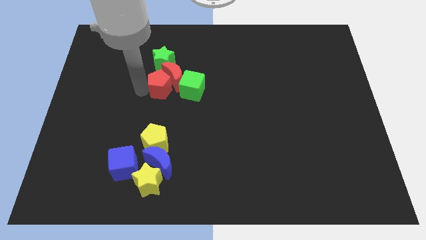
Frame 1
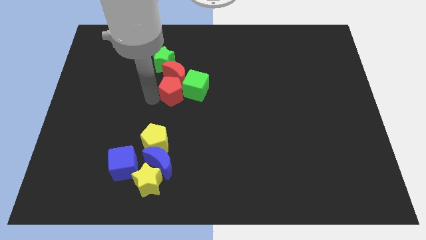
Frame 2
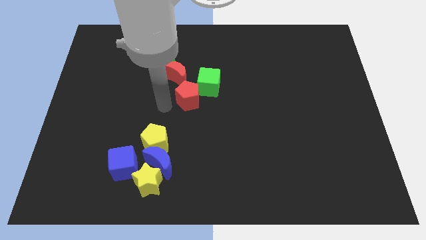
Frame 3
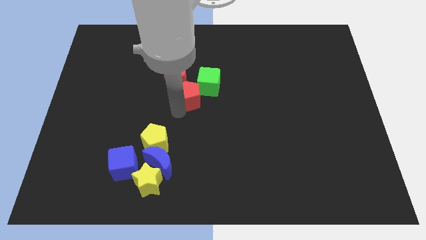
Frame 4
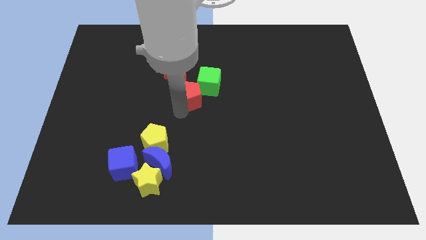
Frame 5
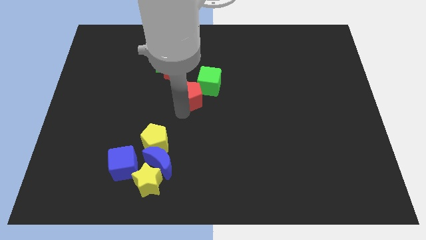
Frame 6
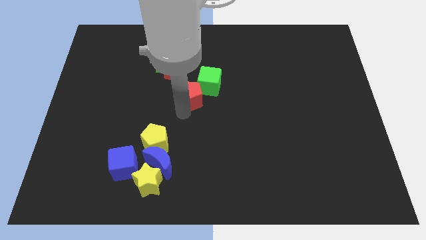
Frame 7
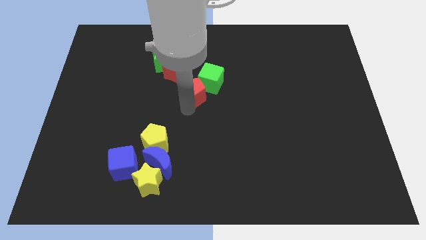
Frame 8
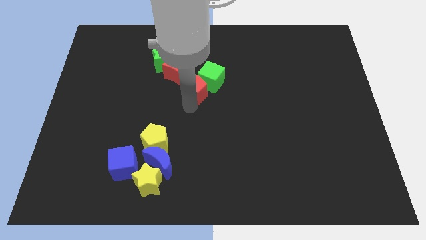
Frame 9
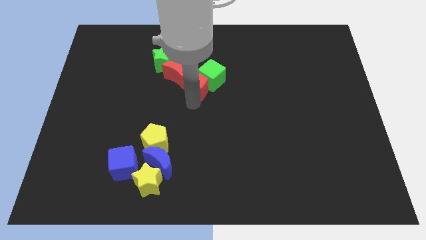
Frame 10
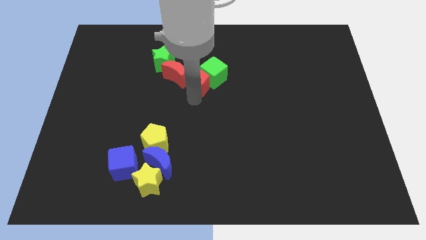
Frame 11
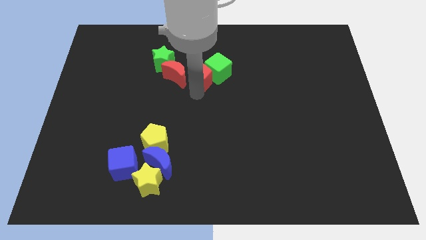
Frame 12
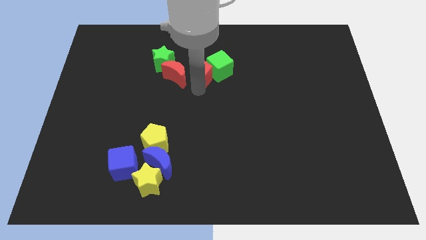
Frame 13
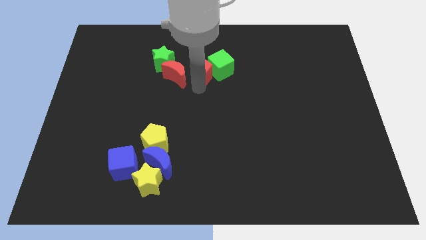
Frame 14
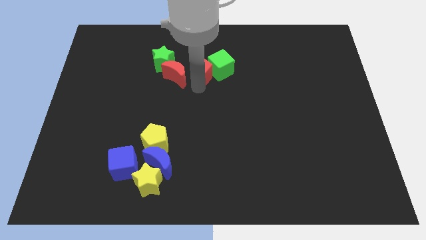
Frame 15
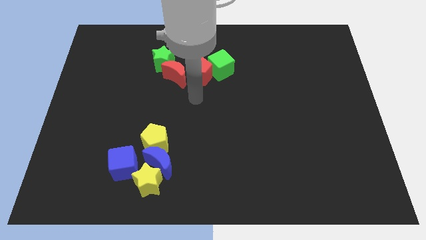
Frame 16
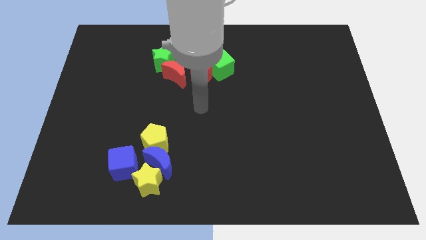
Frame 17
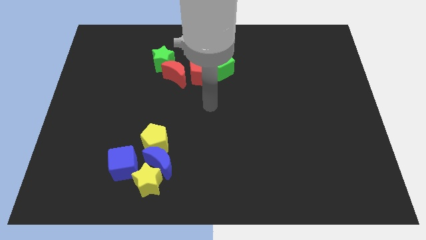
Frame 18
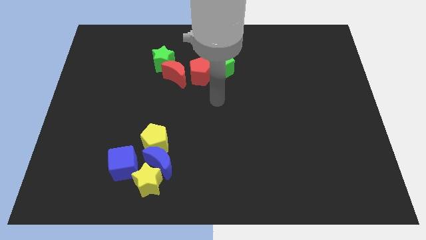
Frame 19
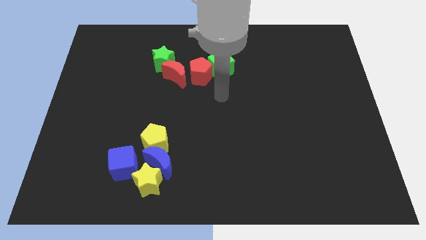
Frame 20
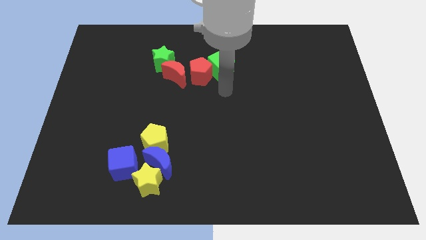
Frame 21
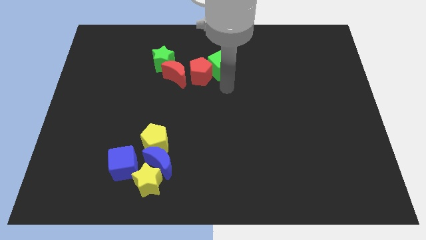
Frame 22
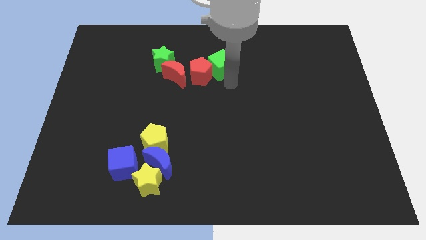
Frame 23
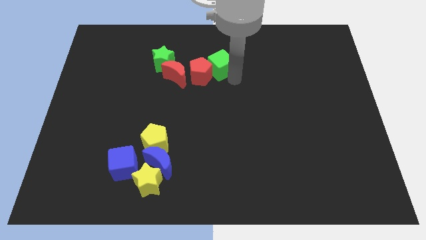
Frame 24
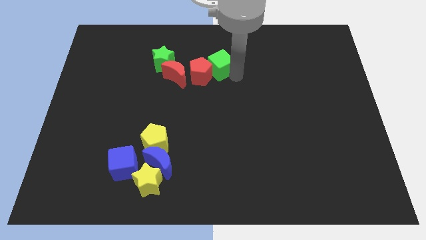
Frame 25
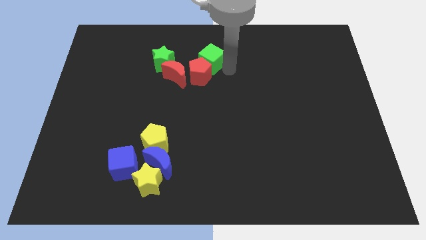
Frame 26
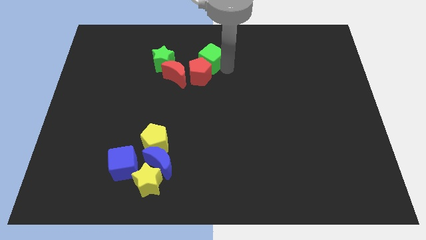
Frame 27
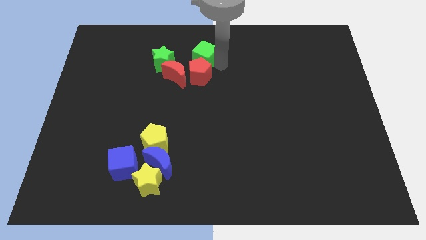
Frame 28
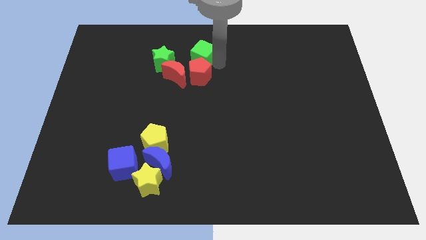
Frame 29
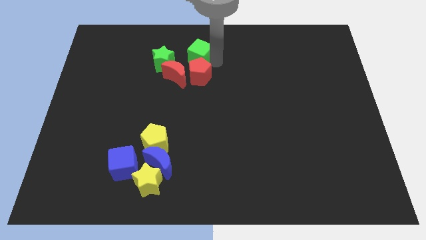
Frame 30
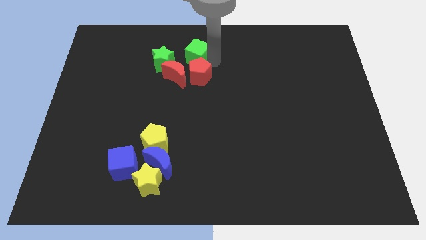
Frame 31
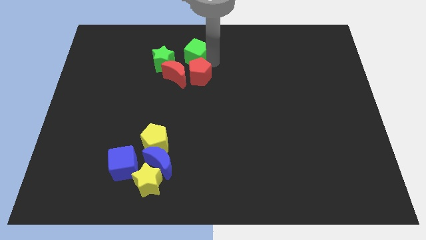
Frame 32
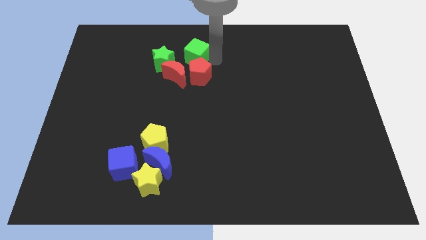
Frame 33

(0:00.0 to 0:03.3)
push the red pentagon along with green cube towards top center

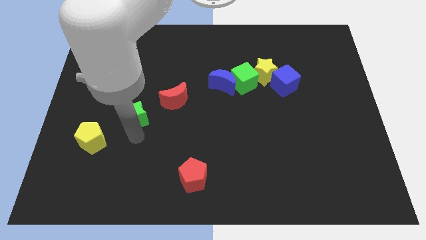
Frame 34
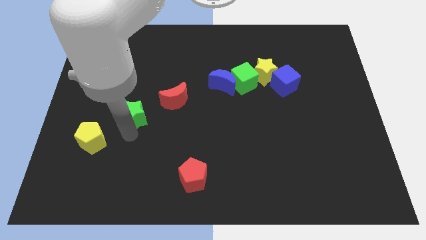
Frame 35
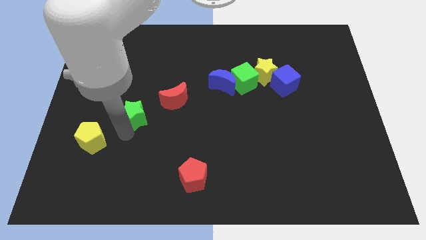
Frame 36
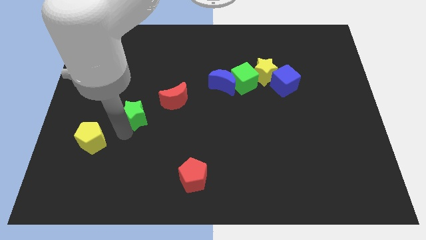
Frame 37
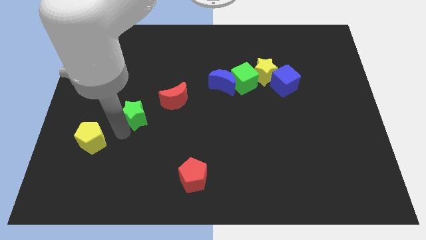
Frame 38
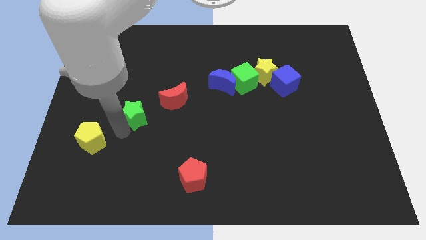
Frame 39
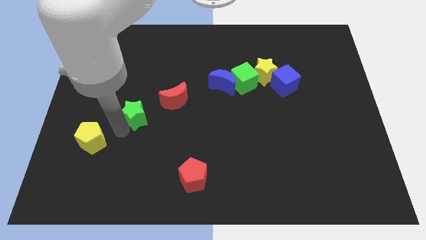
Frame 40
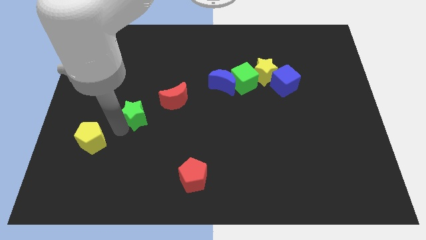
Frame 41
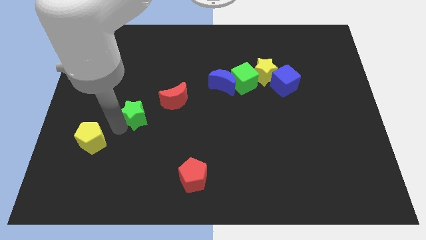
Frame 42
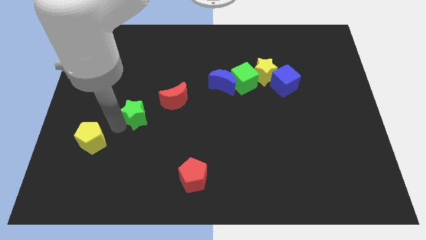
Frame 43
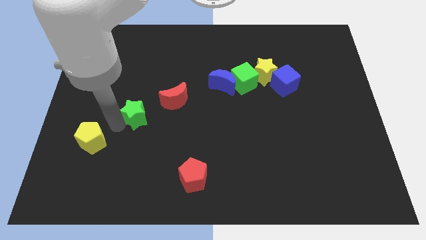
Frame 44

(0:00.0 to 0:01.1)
place your arm to the left of green star

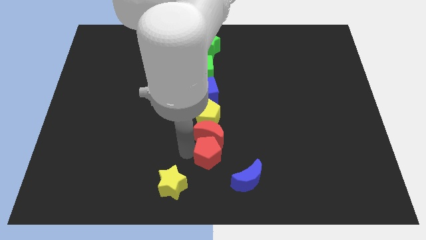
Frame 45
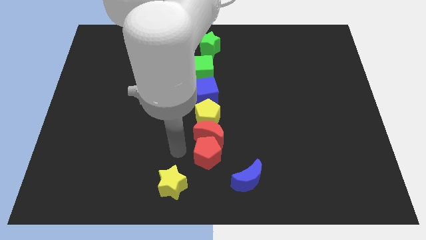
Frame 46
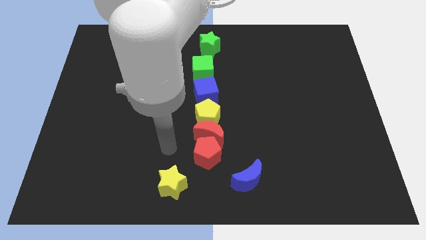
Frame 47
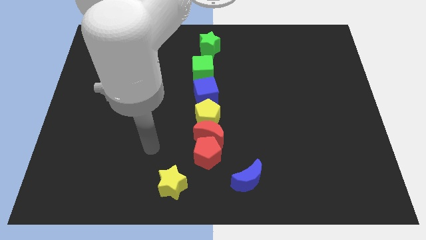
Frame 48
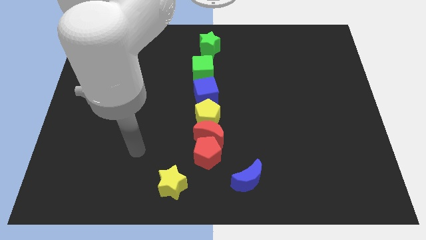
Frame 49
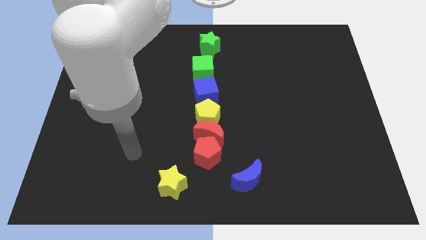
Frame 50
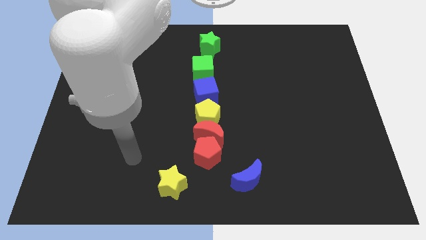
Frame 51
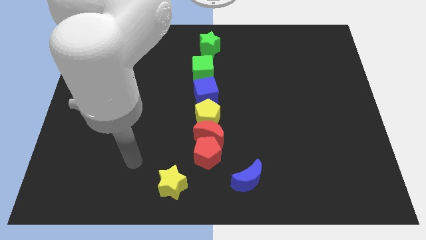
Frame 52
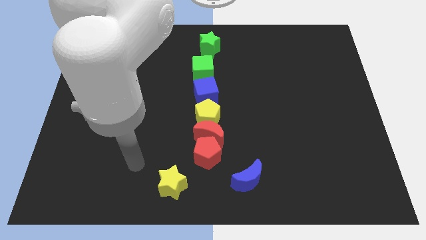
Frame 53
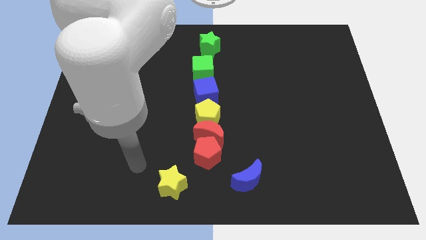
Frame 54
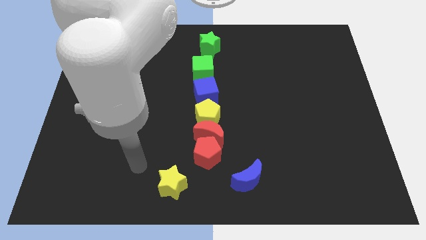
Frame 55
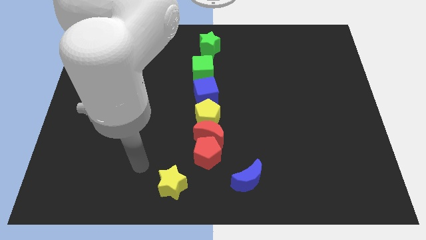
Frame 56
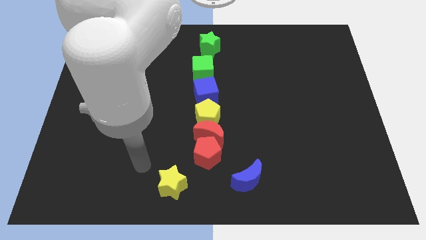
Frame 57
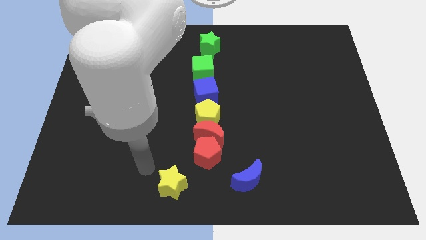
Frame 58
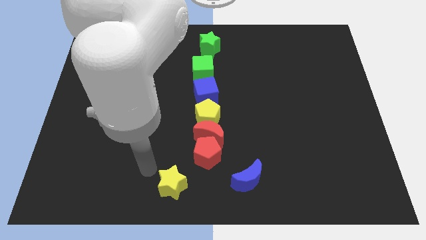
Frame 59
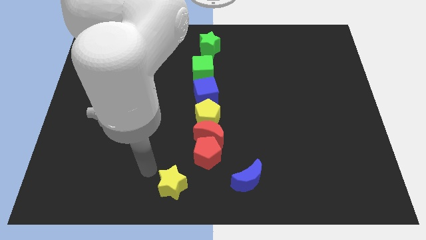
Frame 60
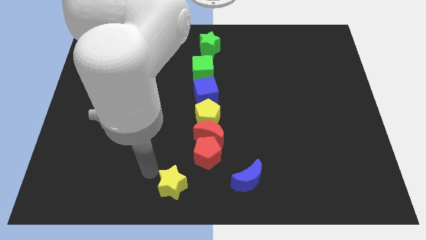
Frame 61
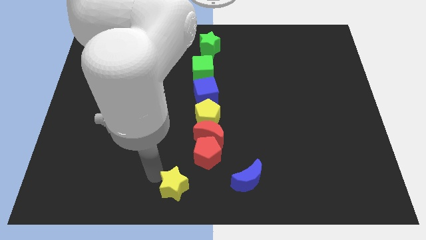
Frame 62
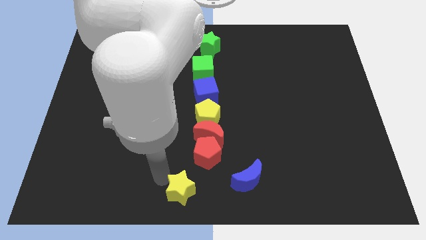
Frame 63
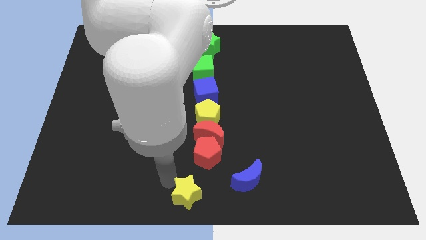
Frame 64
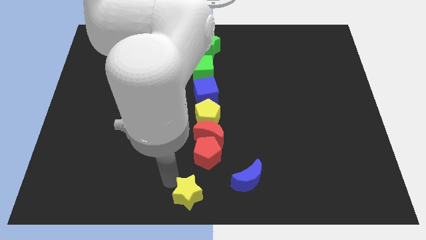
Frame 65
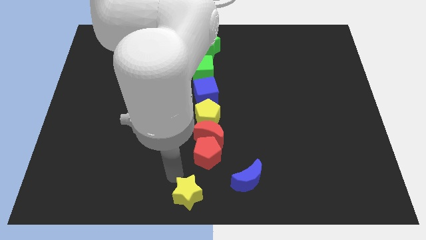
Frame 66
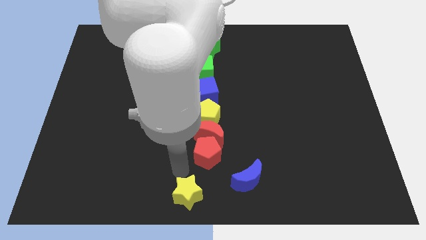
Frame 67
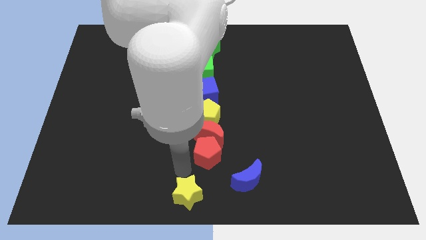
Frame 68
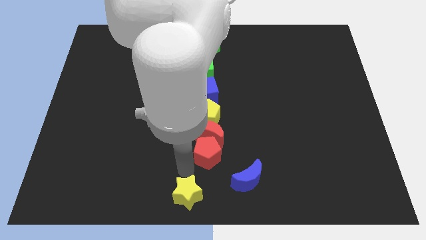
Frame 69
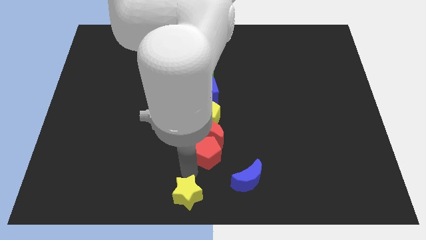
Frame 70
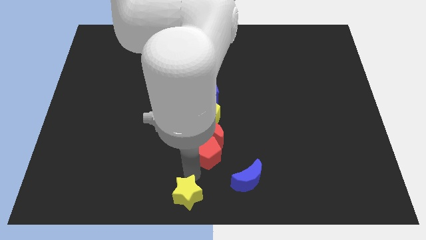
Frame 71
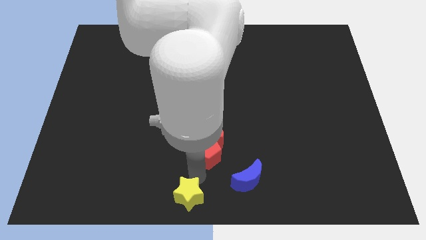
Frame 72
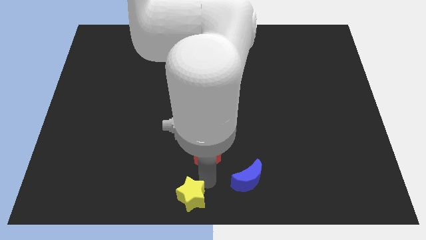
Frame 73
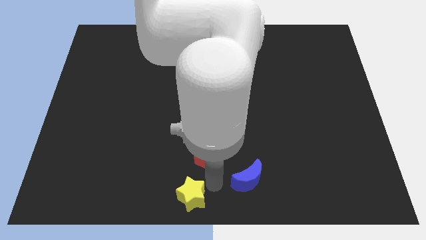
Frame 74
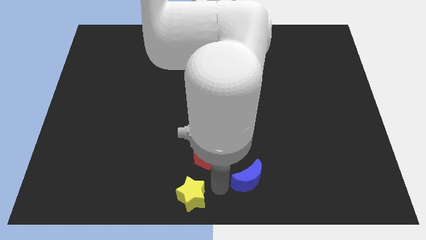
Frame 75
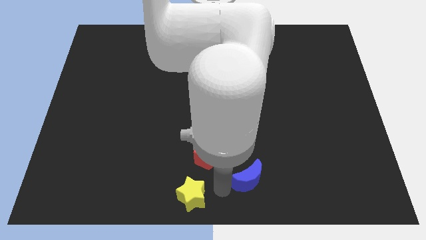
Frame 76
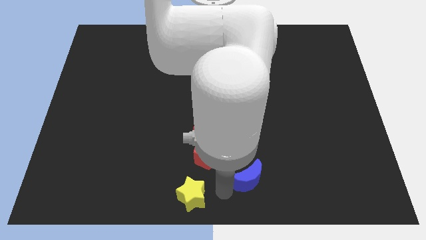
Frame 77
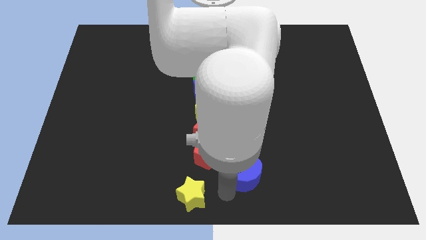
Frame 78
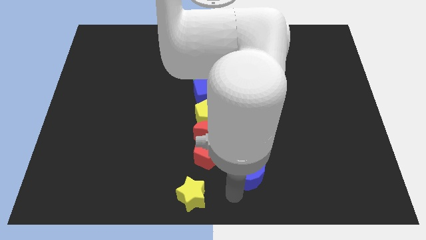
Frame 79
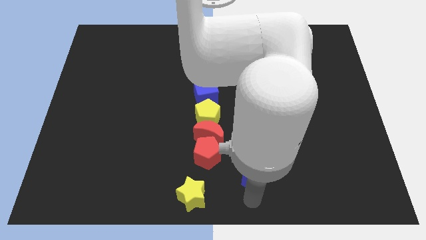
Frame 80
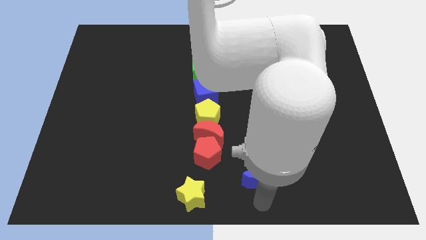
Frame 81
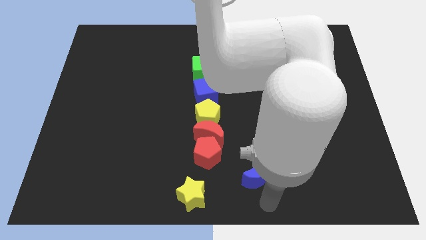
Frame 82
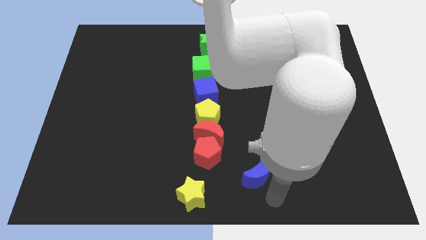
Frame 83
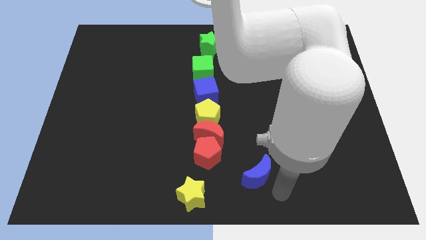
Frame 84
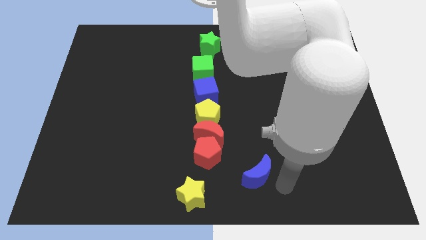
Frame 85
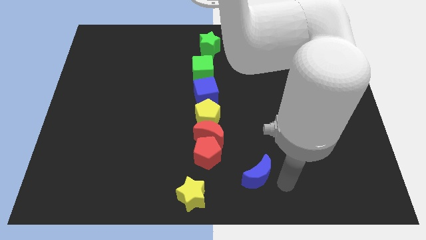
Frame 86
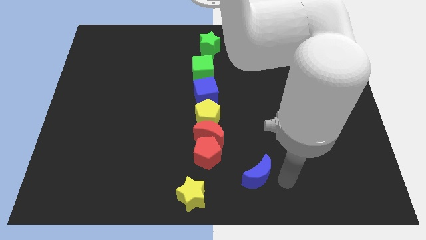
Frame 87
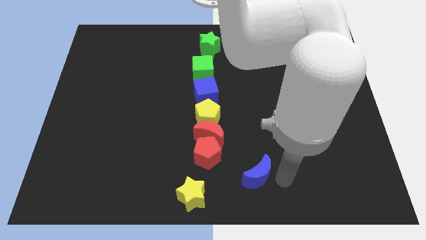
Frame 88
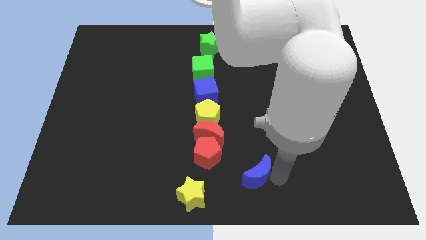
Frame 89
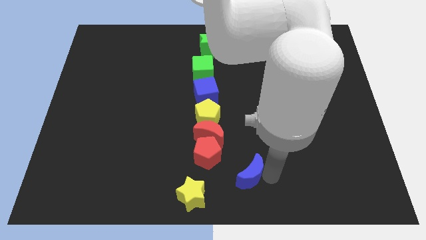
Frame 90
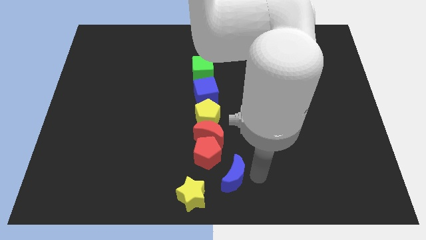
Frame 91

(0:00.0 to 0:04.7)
move the arm to the blue moon
